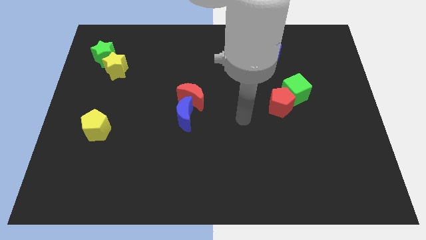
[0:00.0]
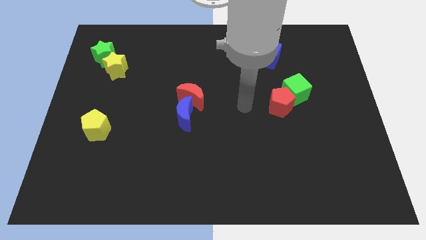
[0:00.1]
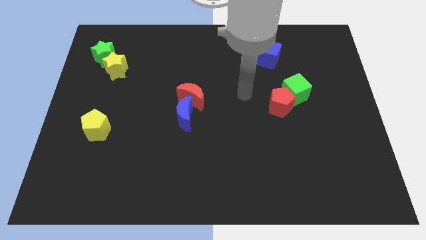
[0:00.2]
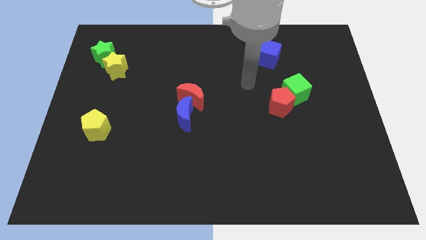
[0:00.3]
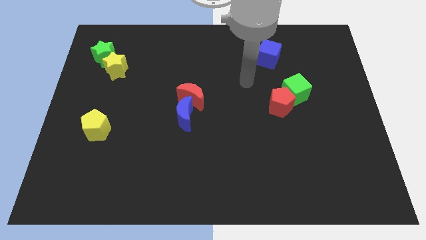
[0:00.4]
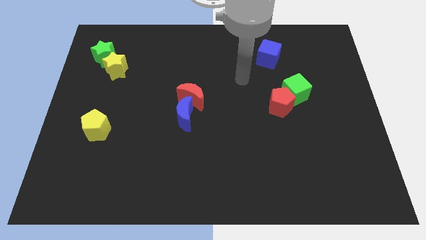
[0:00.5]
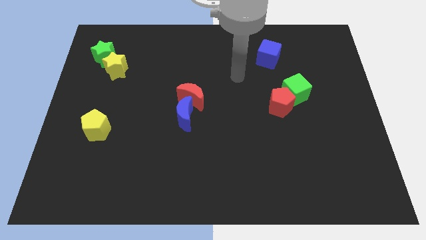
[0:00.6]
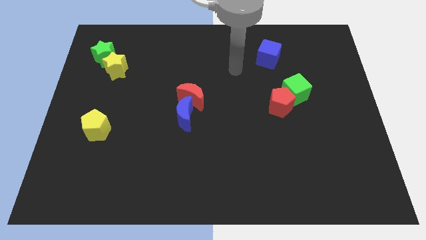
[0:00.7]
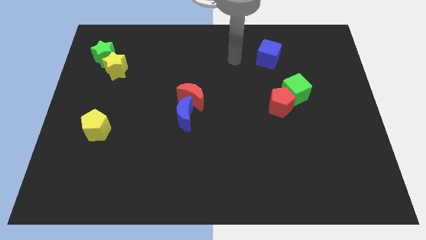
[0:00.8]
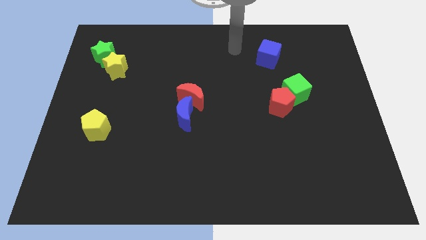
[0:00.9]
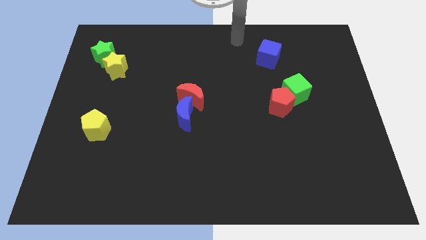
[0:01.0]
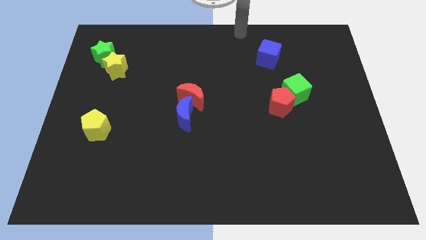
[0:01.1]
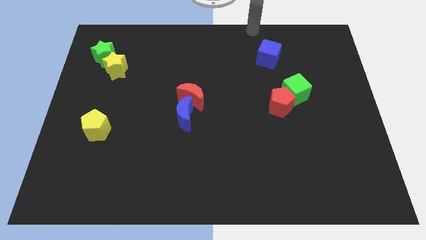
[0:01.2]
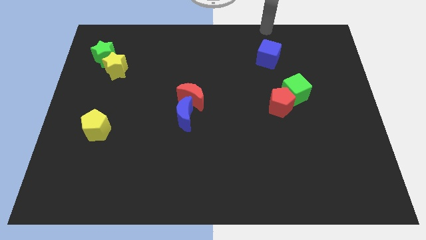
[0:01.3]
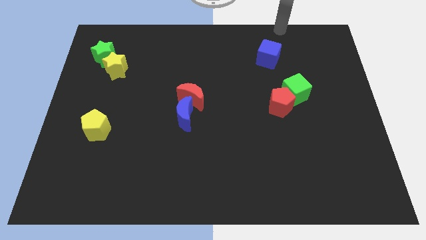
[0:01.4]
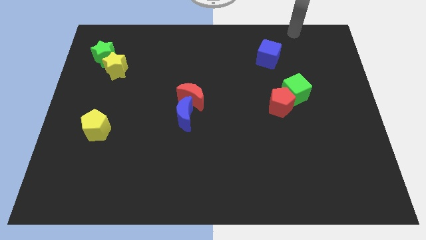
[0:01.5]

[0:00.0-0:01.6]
move your arm close to the blue cube

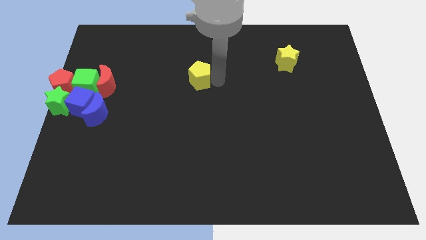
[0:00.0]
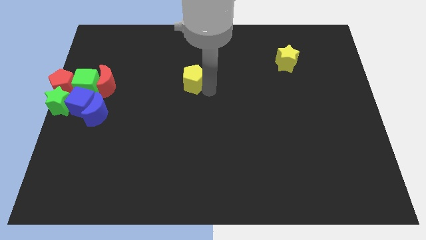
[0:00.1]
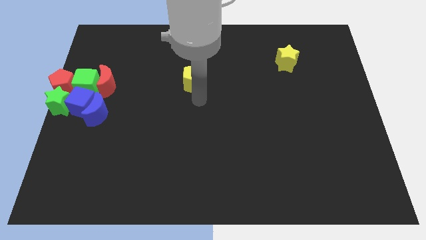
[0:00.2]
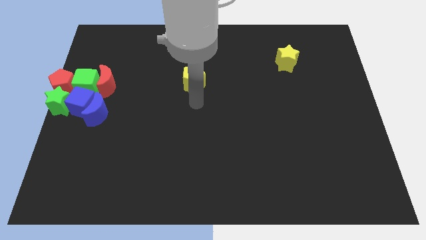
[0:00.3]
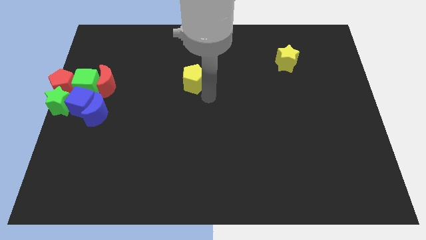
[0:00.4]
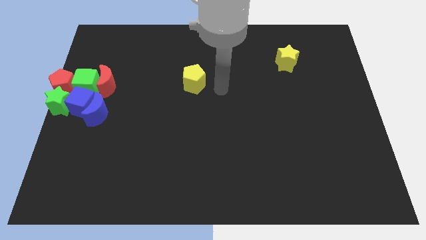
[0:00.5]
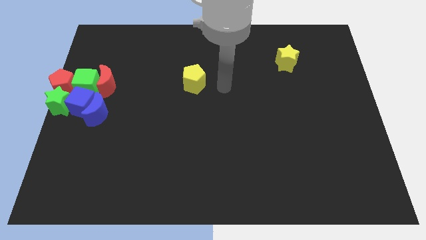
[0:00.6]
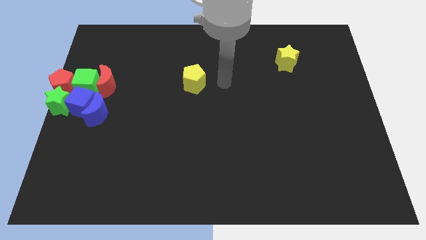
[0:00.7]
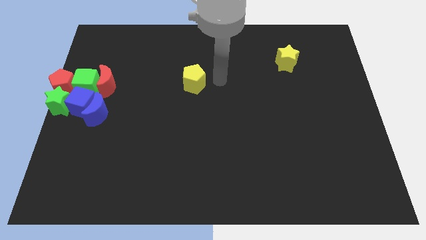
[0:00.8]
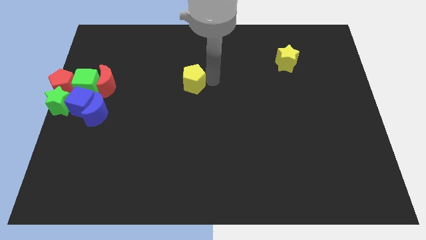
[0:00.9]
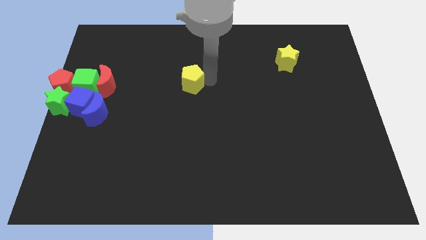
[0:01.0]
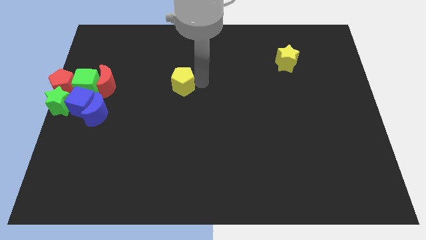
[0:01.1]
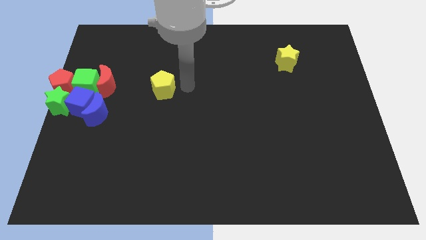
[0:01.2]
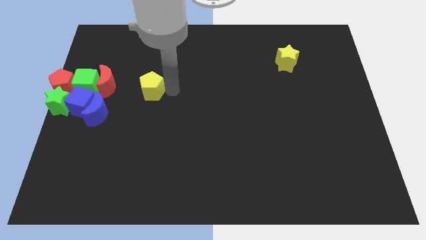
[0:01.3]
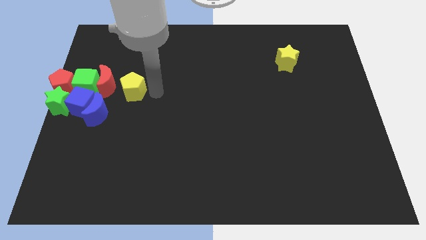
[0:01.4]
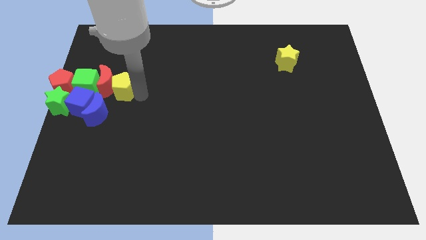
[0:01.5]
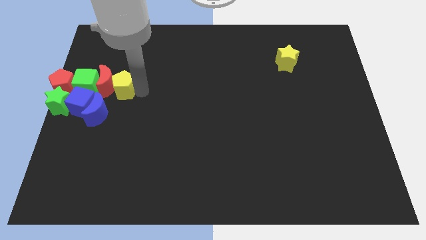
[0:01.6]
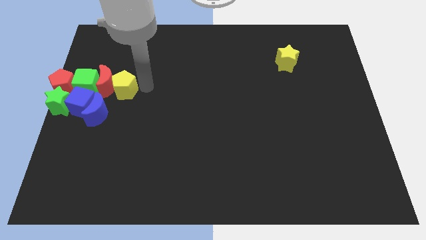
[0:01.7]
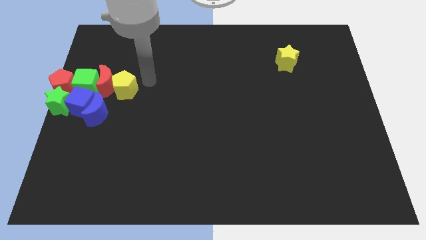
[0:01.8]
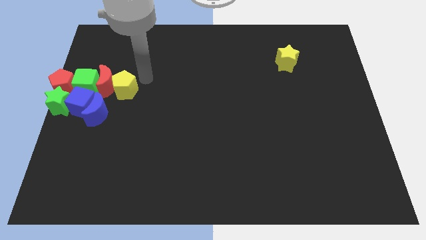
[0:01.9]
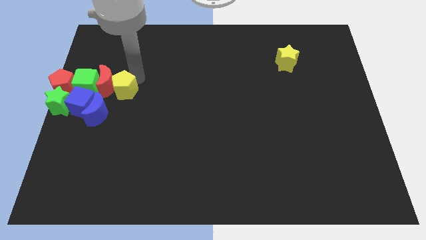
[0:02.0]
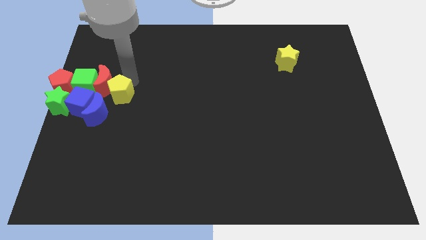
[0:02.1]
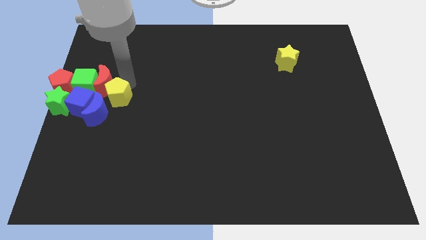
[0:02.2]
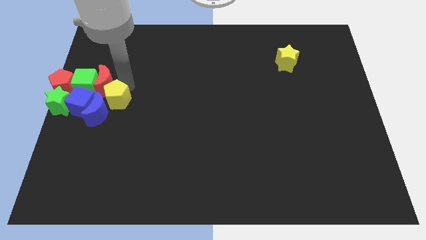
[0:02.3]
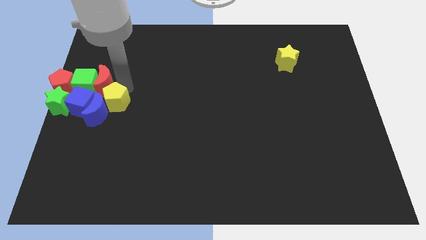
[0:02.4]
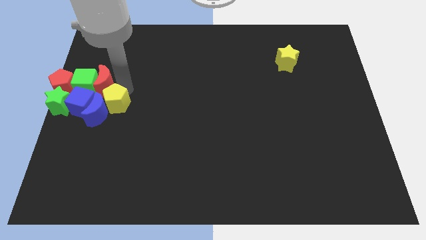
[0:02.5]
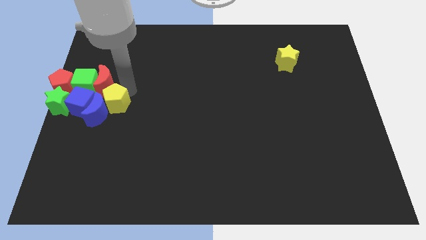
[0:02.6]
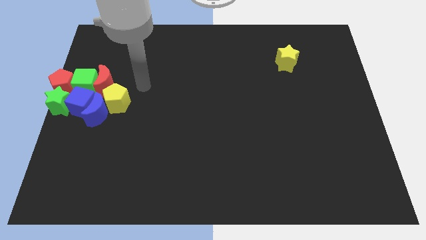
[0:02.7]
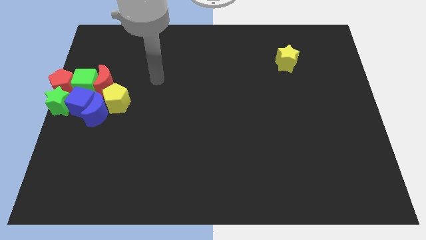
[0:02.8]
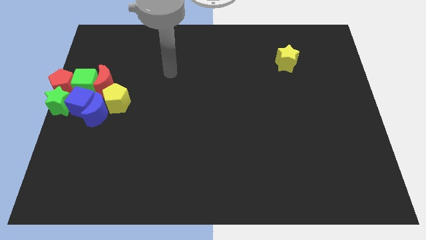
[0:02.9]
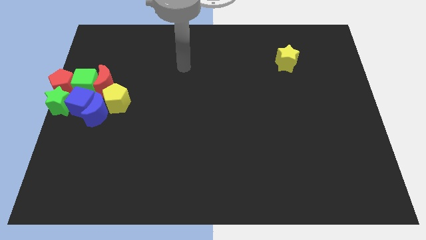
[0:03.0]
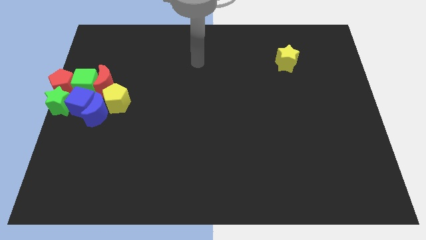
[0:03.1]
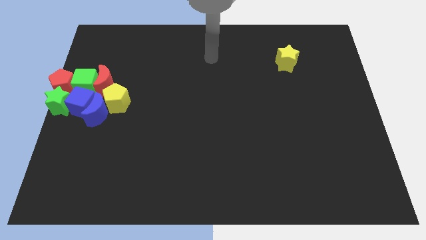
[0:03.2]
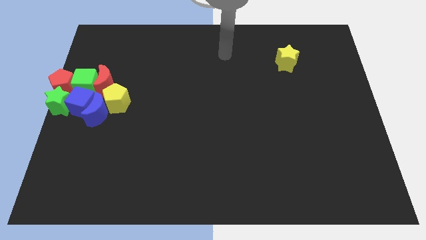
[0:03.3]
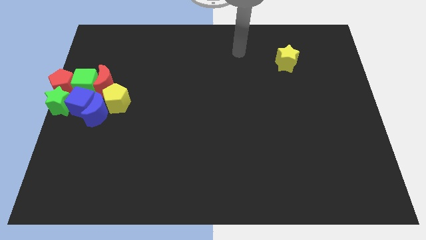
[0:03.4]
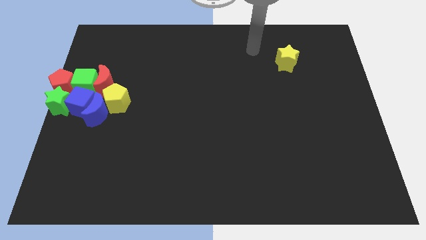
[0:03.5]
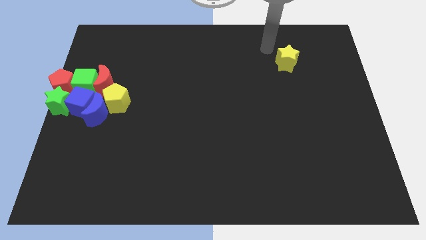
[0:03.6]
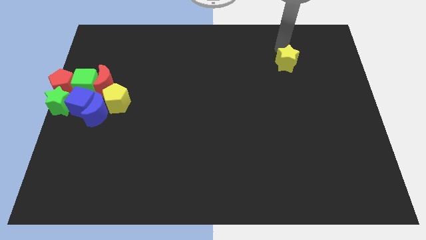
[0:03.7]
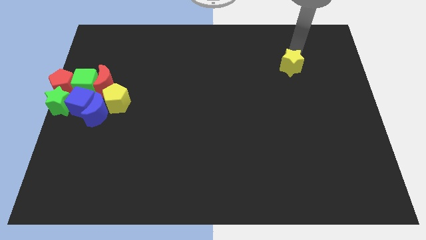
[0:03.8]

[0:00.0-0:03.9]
add the yellow pentagon to the group of blocks

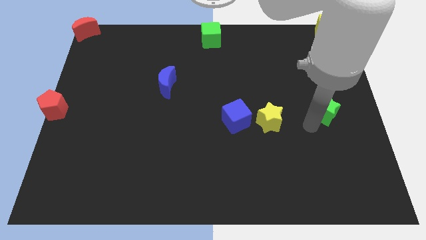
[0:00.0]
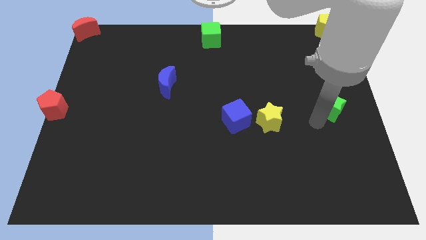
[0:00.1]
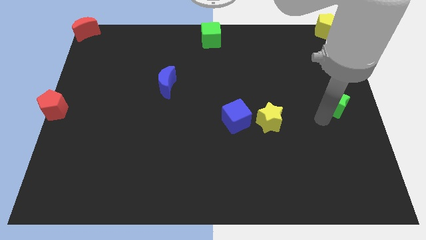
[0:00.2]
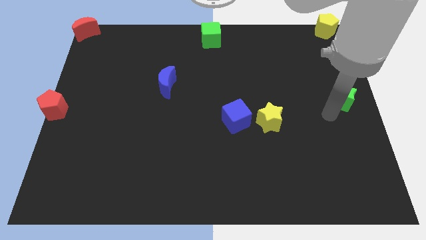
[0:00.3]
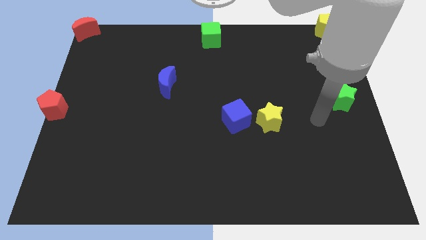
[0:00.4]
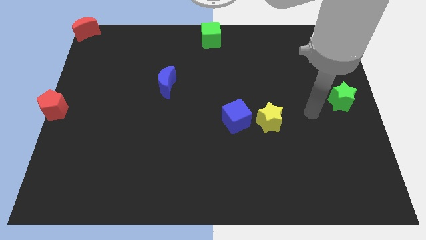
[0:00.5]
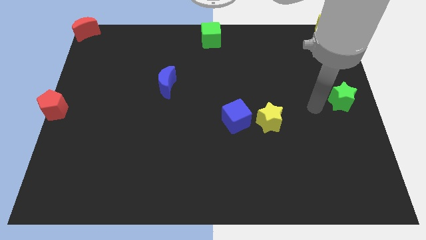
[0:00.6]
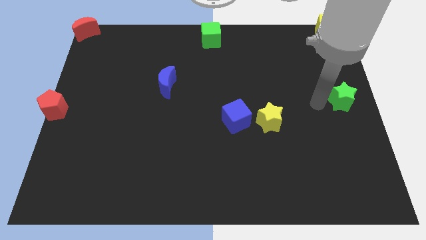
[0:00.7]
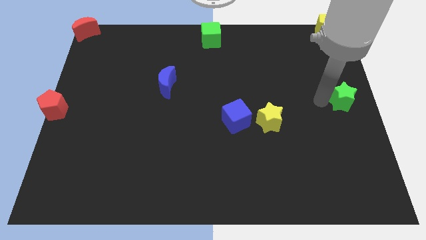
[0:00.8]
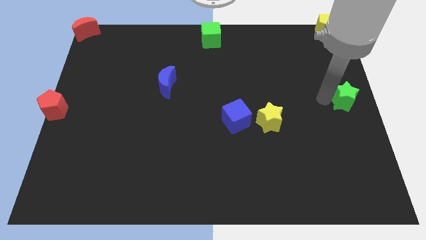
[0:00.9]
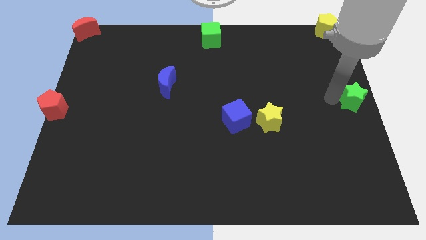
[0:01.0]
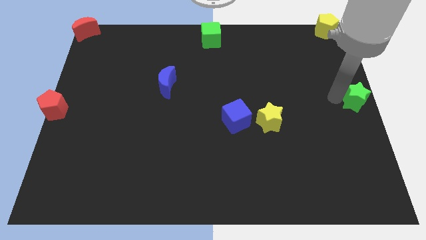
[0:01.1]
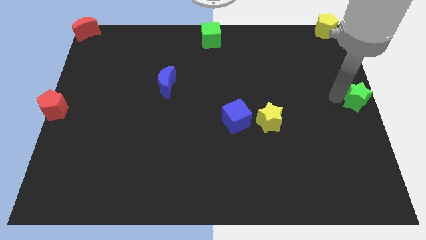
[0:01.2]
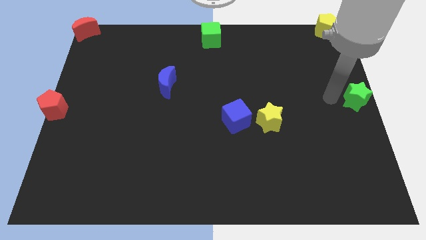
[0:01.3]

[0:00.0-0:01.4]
move the green star to the right center of the board

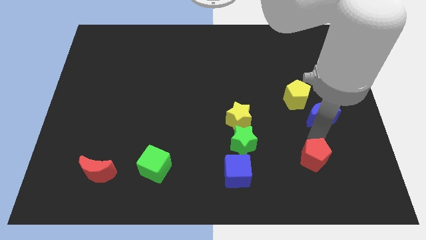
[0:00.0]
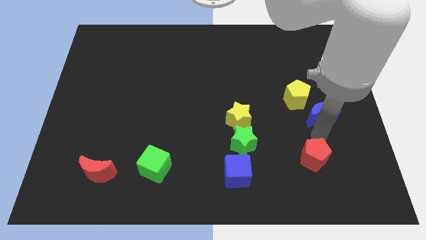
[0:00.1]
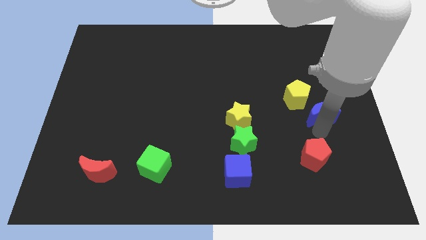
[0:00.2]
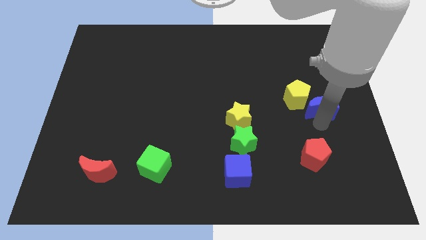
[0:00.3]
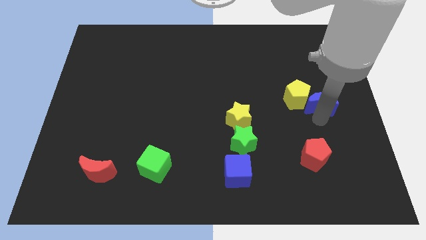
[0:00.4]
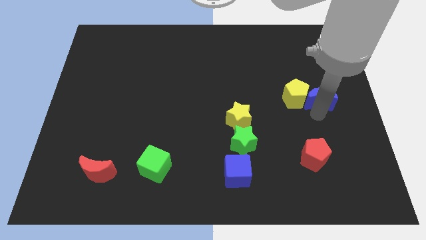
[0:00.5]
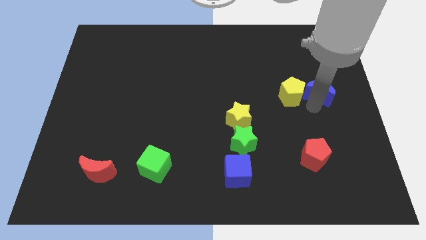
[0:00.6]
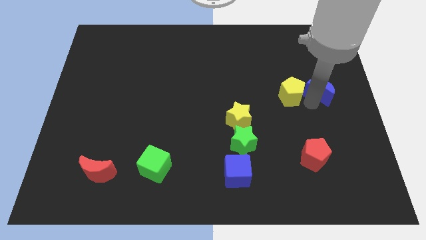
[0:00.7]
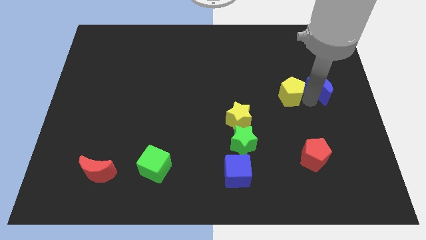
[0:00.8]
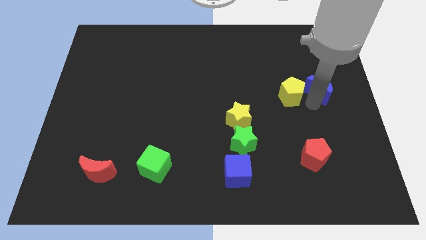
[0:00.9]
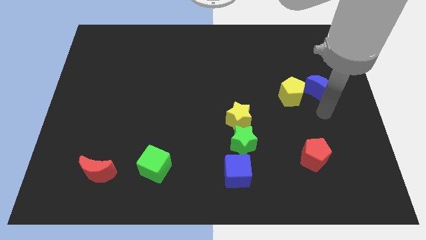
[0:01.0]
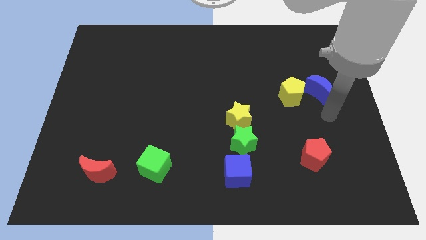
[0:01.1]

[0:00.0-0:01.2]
push the blue moon into yellow pentagon

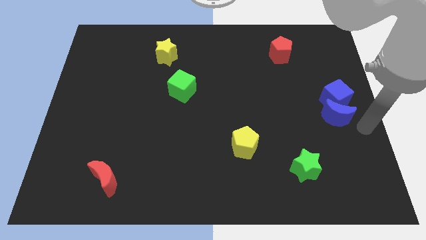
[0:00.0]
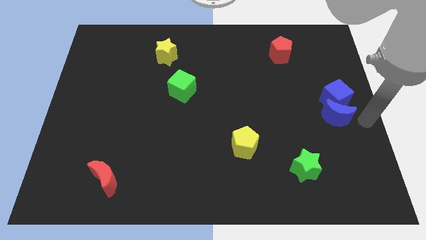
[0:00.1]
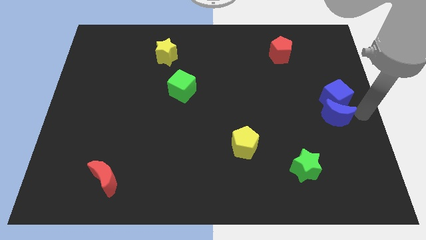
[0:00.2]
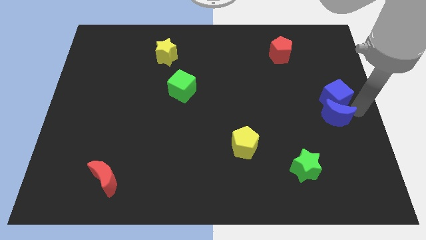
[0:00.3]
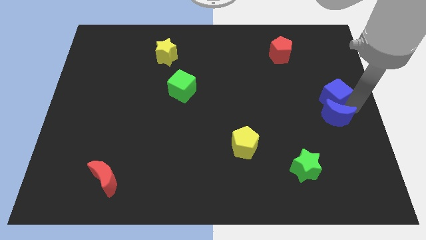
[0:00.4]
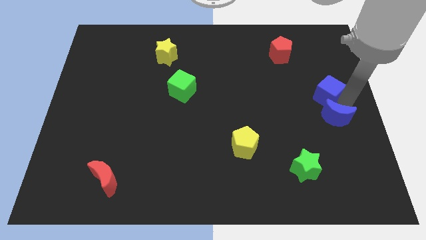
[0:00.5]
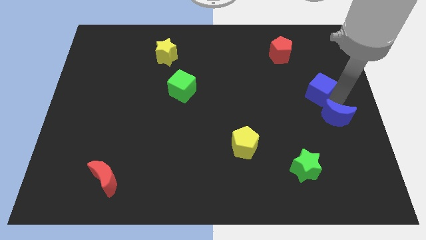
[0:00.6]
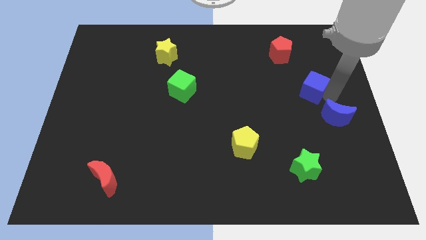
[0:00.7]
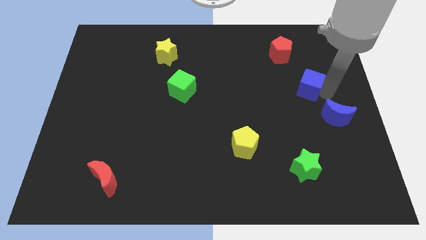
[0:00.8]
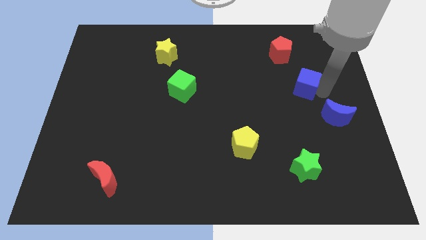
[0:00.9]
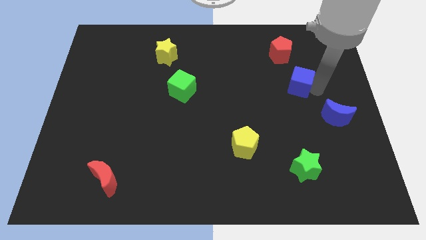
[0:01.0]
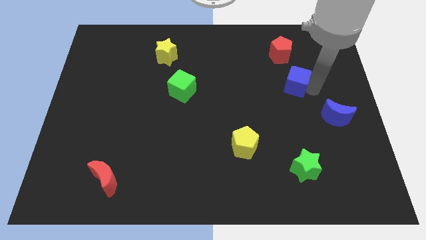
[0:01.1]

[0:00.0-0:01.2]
separate the blue cube from the blue crescent
